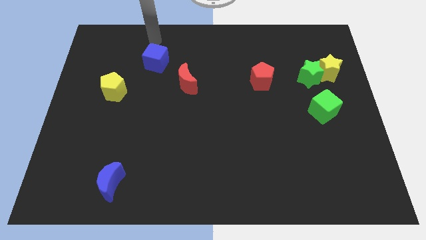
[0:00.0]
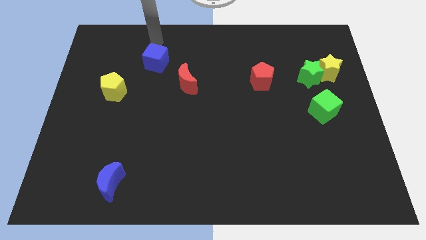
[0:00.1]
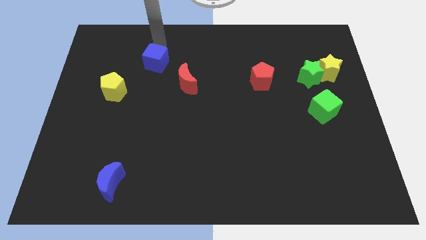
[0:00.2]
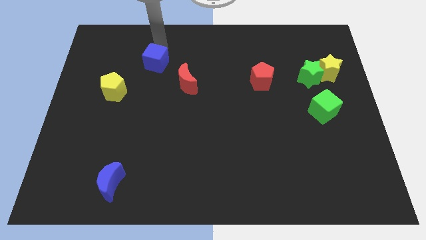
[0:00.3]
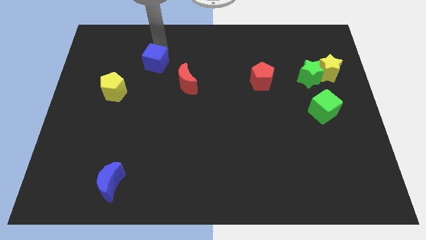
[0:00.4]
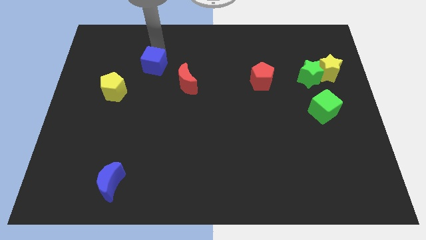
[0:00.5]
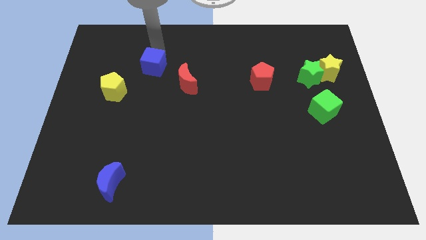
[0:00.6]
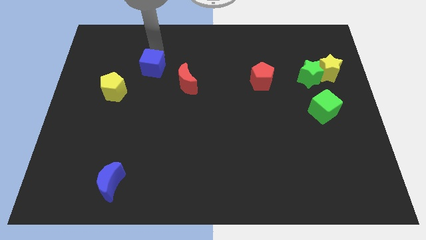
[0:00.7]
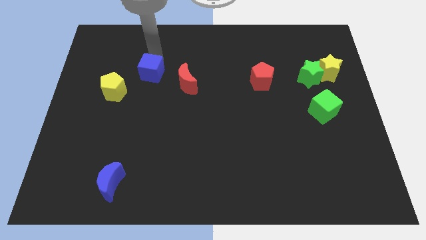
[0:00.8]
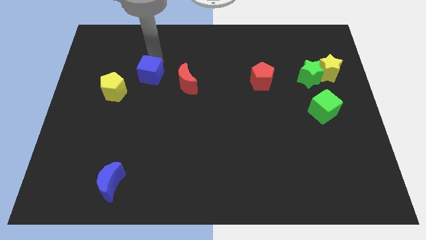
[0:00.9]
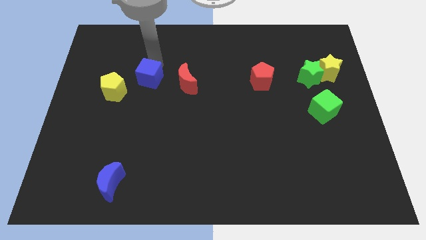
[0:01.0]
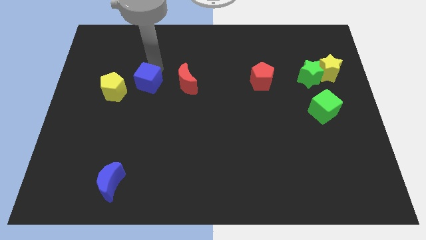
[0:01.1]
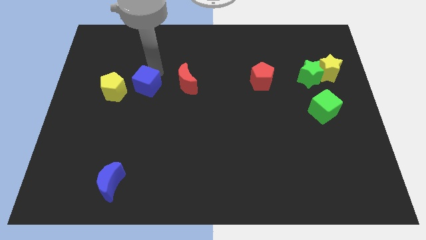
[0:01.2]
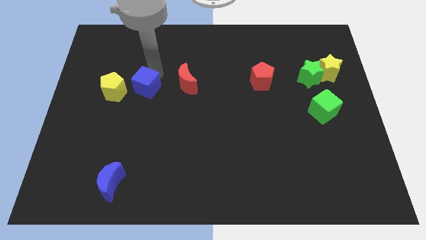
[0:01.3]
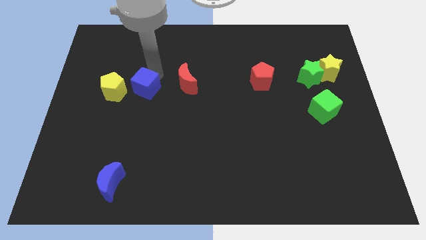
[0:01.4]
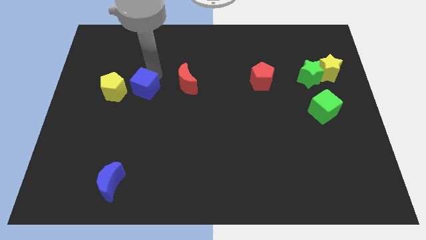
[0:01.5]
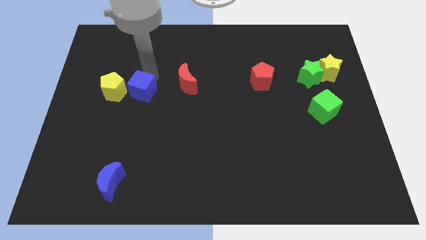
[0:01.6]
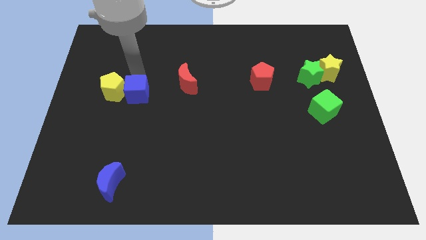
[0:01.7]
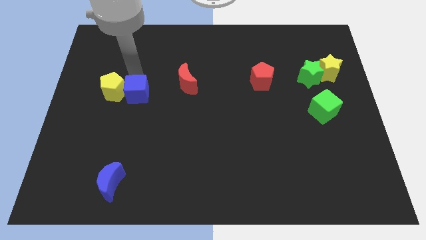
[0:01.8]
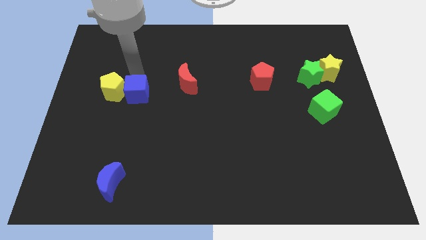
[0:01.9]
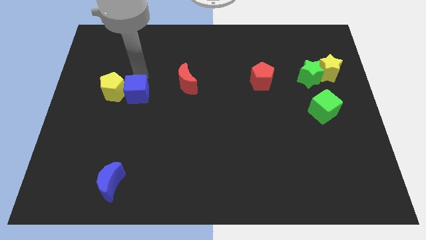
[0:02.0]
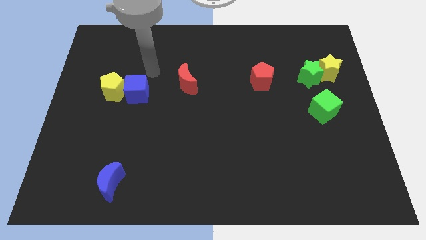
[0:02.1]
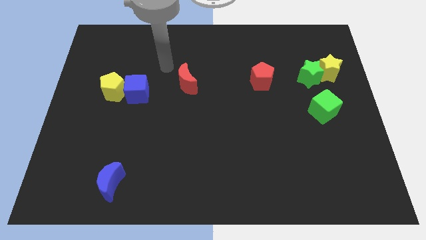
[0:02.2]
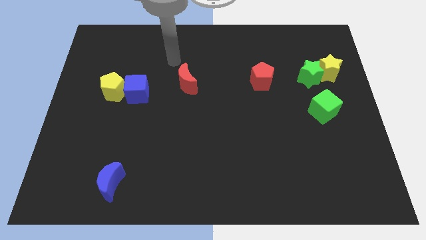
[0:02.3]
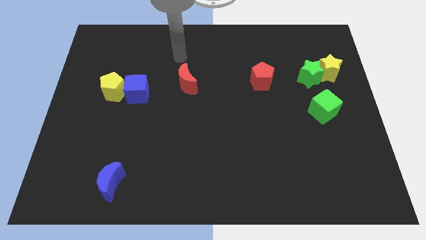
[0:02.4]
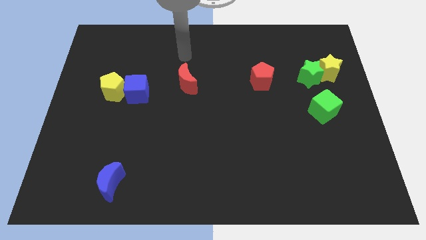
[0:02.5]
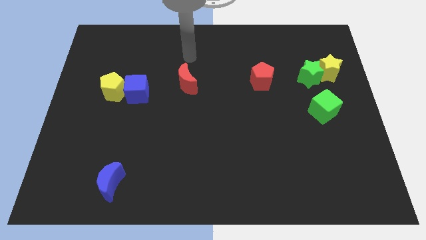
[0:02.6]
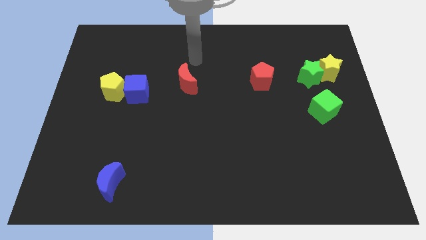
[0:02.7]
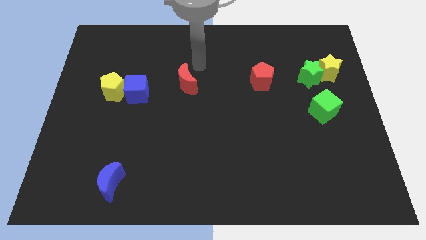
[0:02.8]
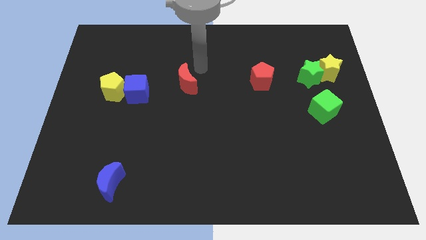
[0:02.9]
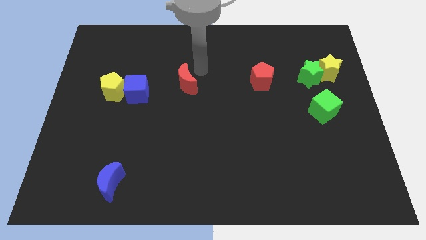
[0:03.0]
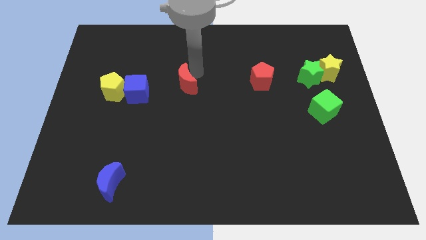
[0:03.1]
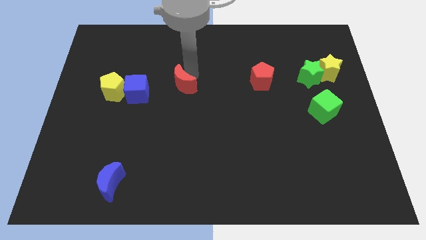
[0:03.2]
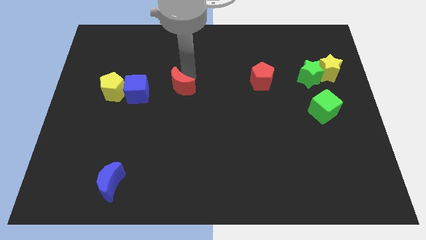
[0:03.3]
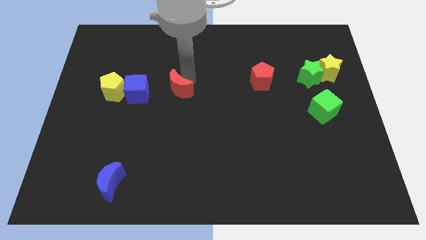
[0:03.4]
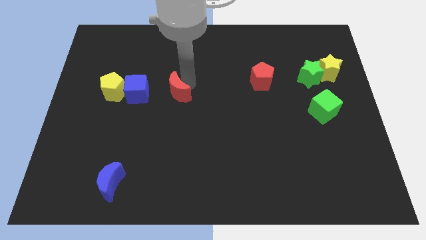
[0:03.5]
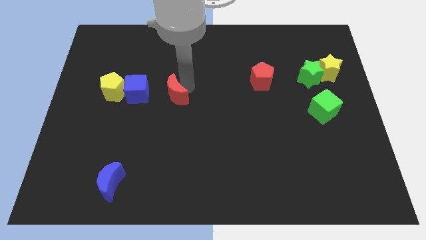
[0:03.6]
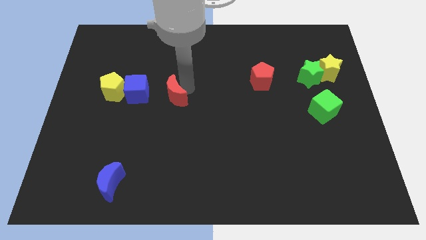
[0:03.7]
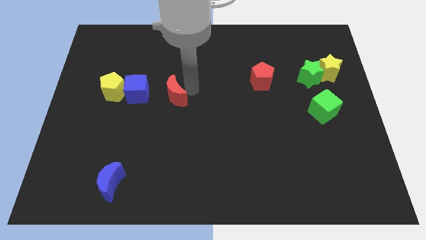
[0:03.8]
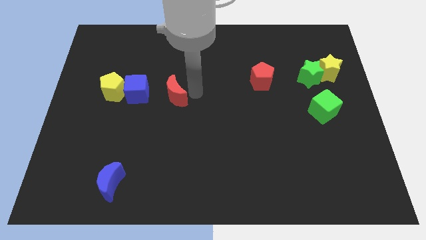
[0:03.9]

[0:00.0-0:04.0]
move red crescent to the right of blue cube

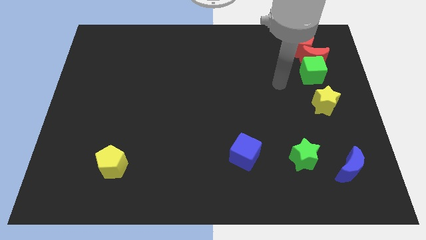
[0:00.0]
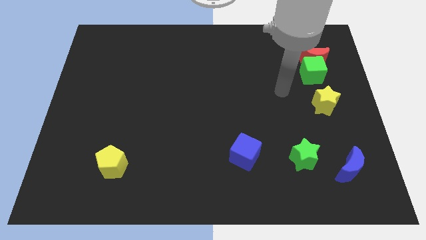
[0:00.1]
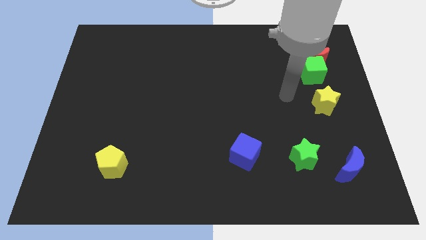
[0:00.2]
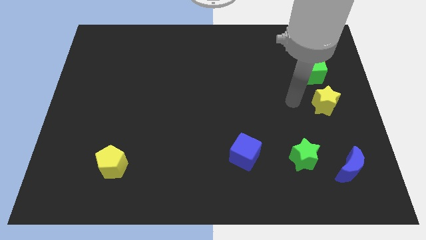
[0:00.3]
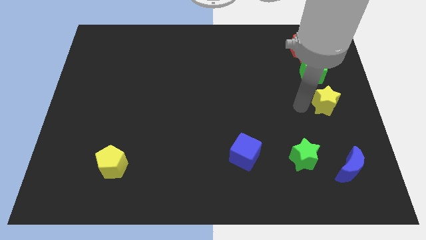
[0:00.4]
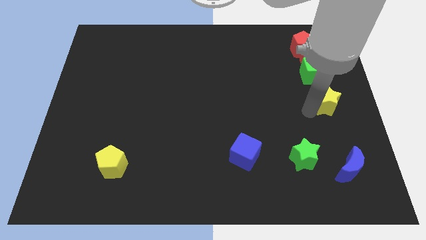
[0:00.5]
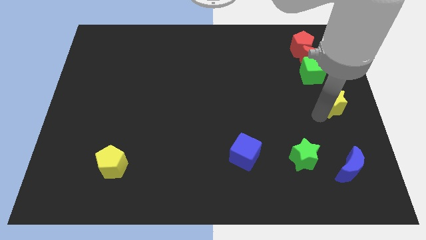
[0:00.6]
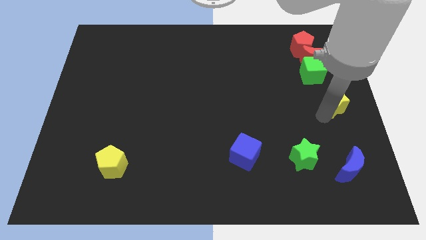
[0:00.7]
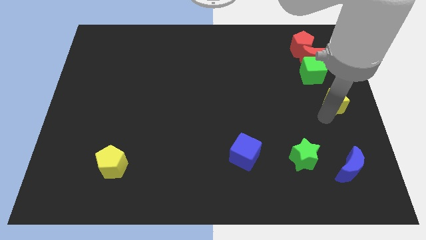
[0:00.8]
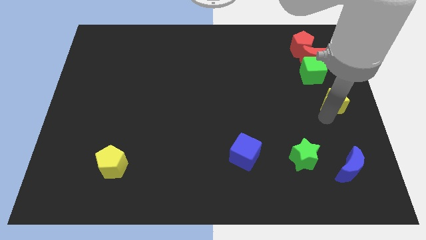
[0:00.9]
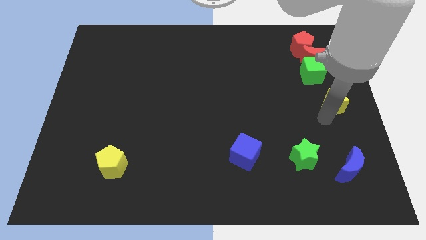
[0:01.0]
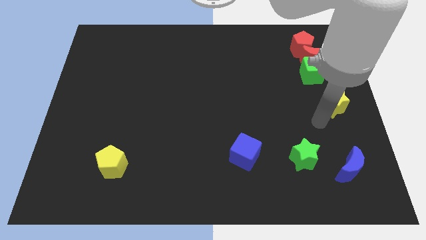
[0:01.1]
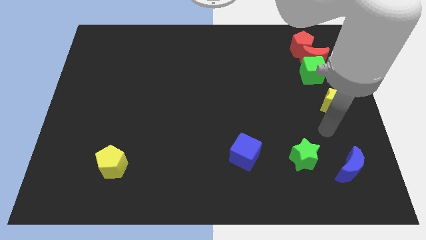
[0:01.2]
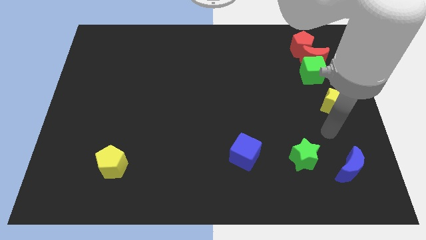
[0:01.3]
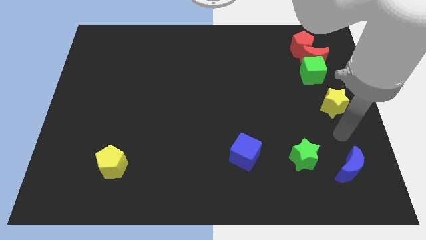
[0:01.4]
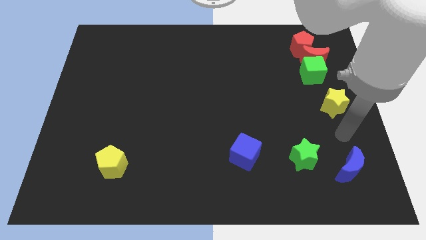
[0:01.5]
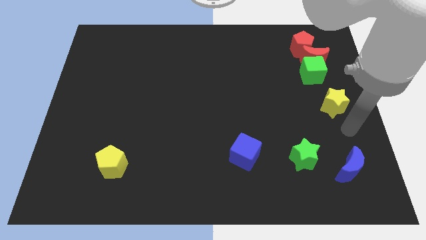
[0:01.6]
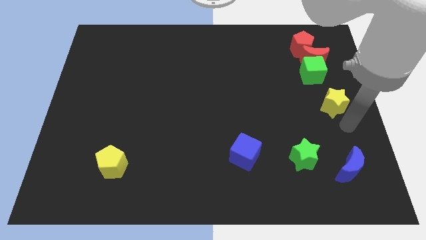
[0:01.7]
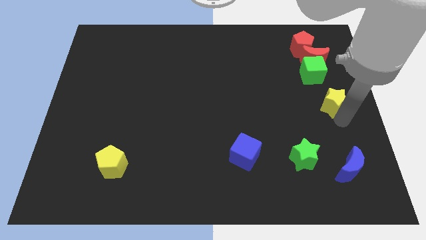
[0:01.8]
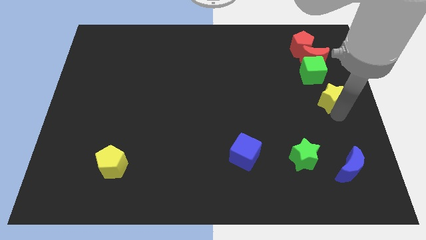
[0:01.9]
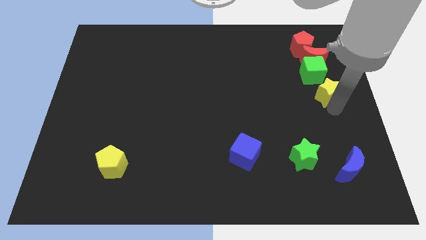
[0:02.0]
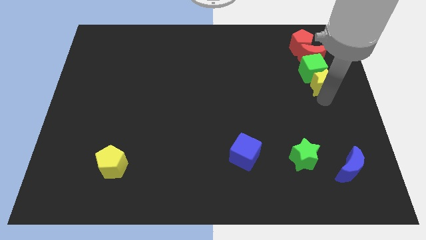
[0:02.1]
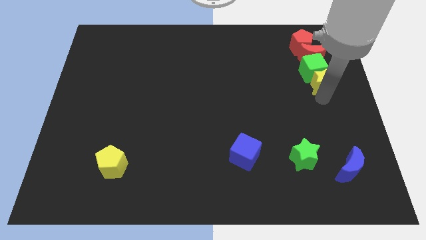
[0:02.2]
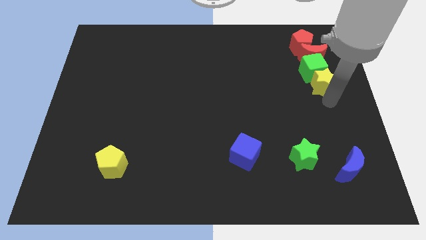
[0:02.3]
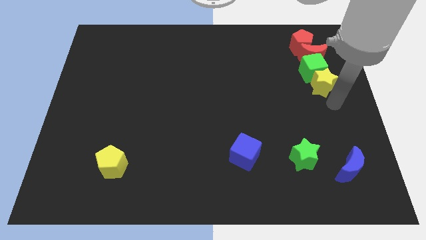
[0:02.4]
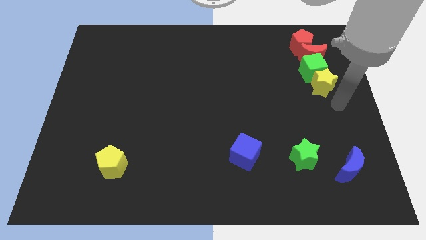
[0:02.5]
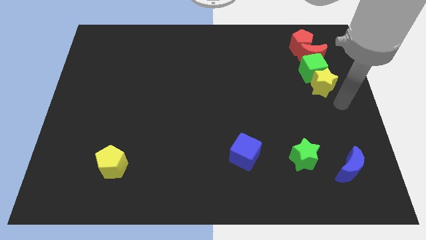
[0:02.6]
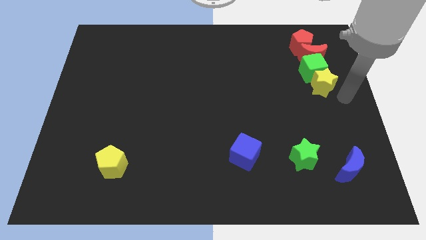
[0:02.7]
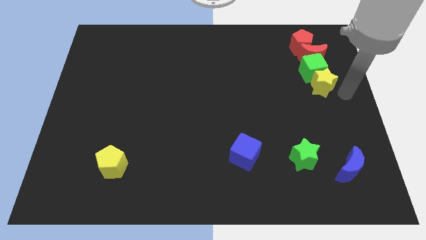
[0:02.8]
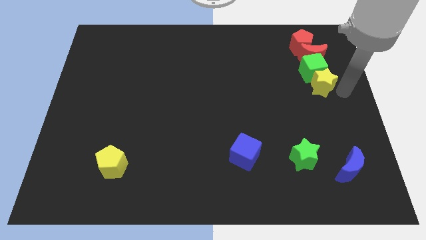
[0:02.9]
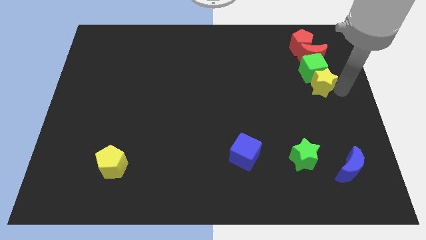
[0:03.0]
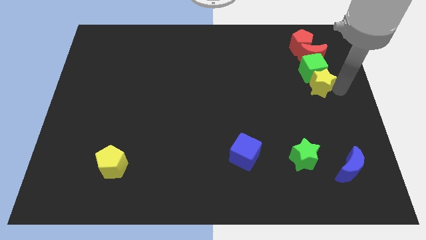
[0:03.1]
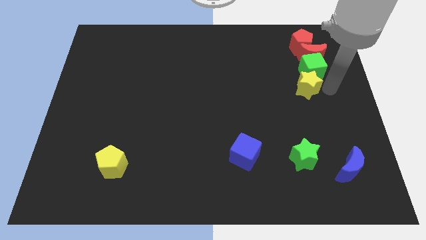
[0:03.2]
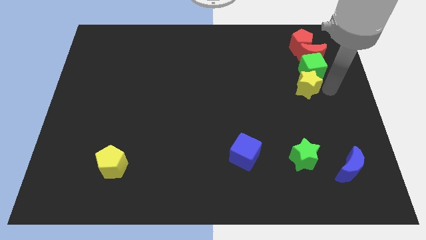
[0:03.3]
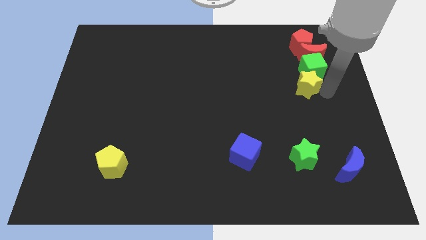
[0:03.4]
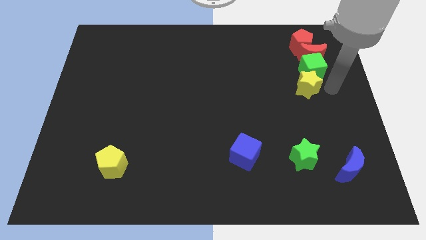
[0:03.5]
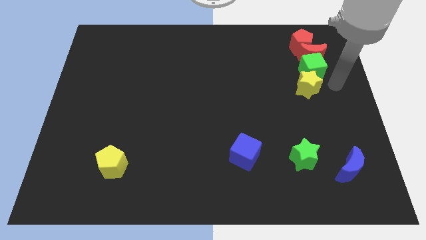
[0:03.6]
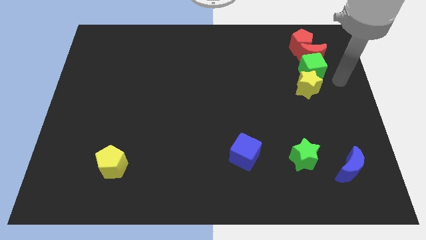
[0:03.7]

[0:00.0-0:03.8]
move the yellow star into green cube

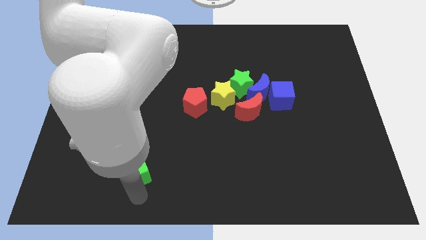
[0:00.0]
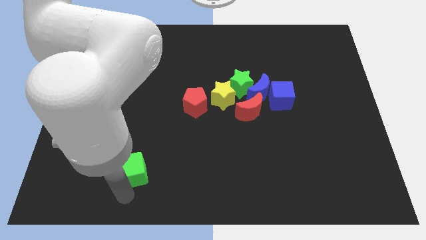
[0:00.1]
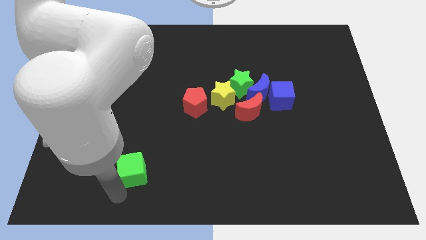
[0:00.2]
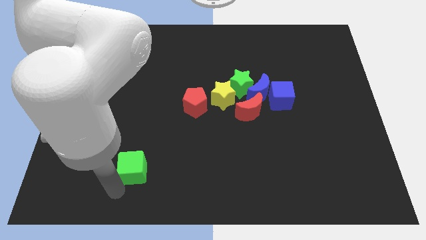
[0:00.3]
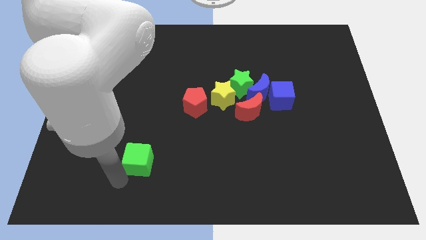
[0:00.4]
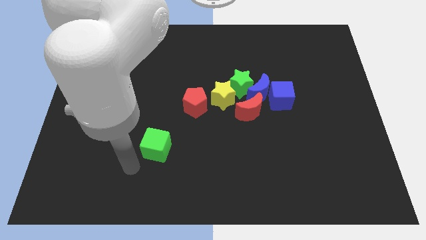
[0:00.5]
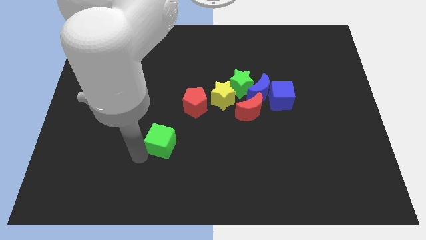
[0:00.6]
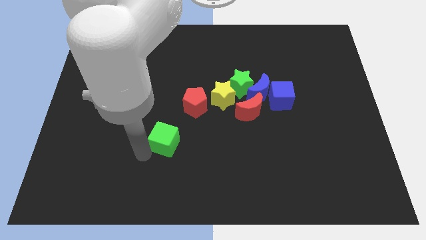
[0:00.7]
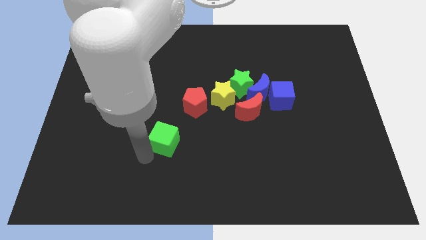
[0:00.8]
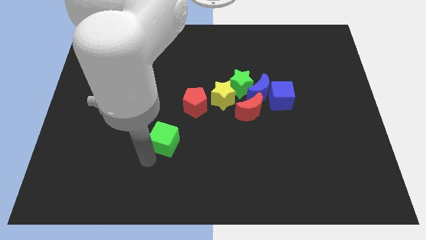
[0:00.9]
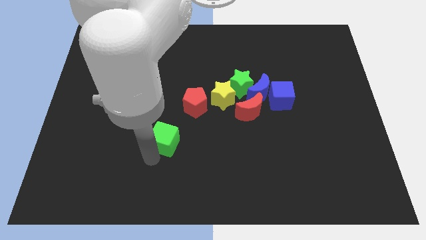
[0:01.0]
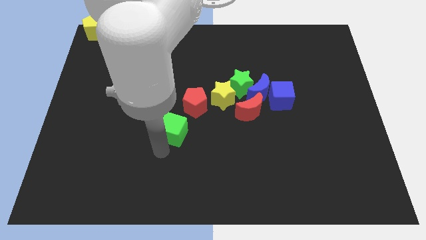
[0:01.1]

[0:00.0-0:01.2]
move the green star up slightly to the center of the board
